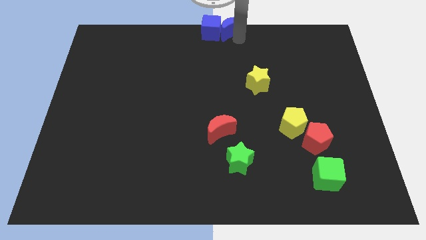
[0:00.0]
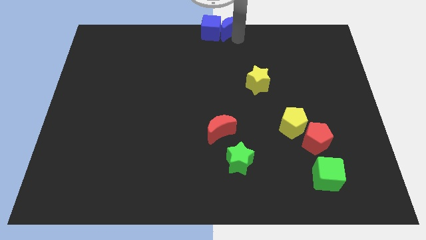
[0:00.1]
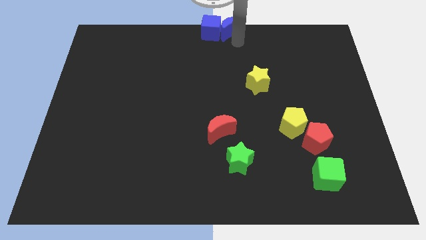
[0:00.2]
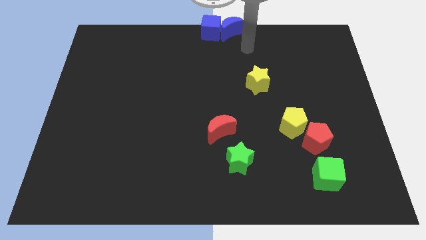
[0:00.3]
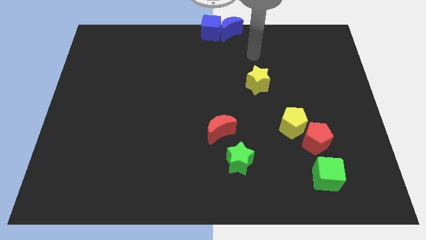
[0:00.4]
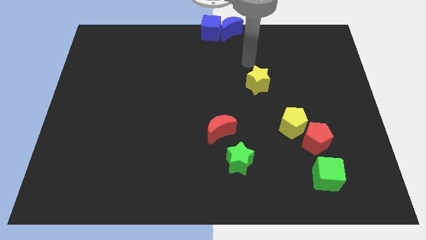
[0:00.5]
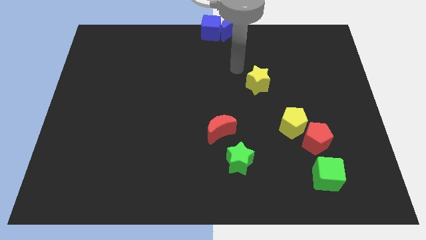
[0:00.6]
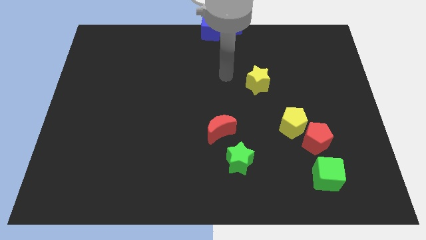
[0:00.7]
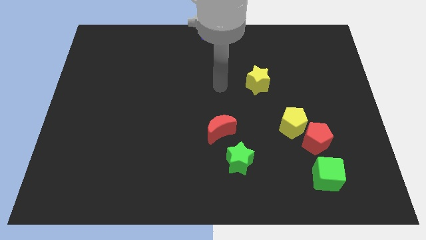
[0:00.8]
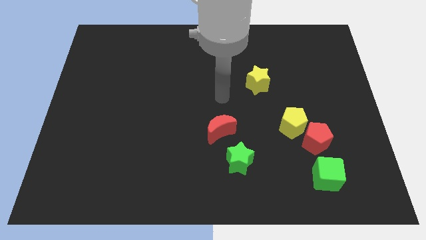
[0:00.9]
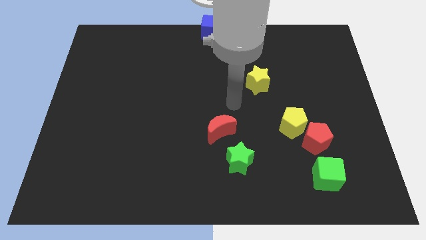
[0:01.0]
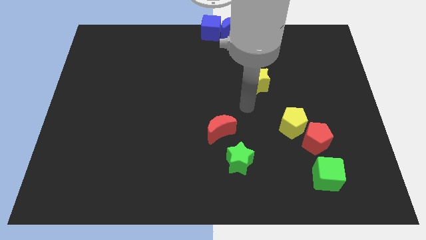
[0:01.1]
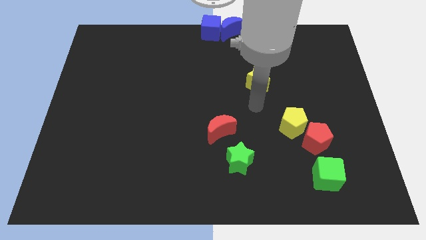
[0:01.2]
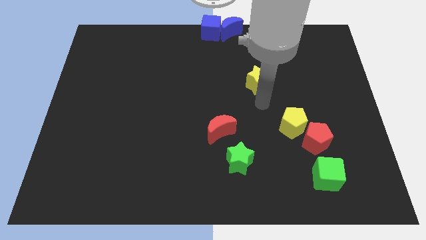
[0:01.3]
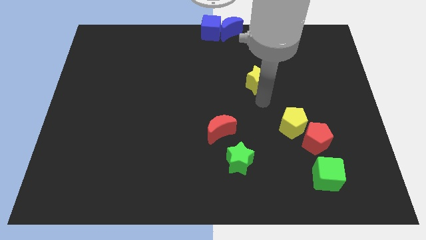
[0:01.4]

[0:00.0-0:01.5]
move your arm to the bottom of the yellow star

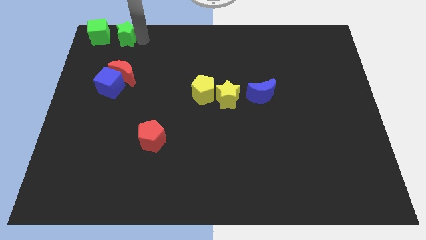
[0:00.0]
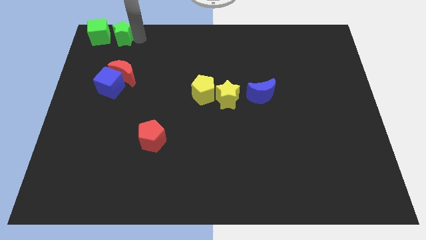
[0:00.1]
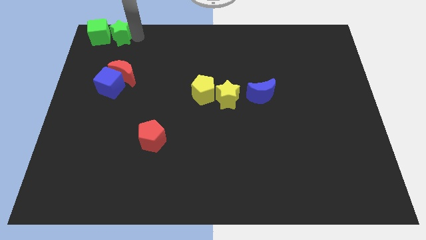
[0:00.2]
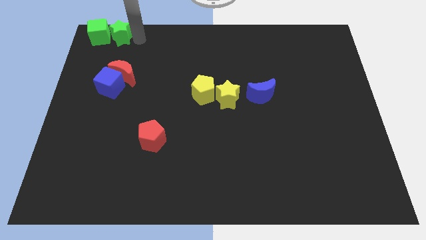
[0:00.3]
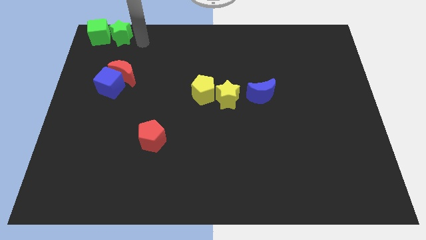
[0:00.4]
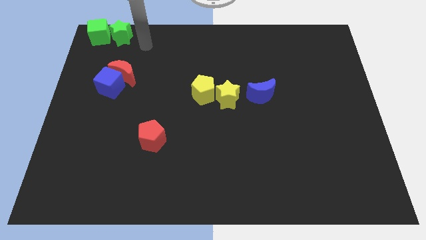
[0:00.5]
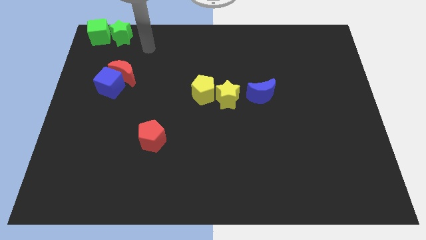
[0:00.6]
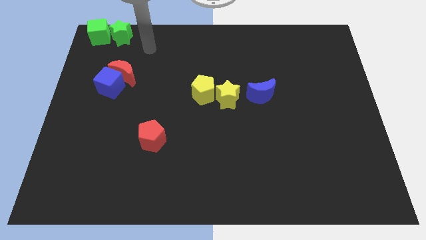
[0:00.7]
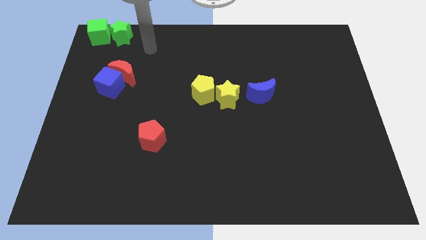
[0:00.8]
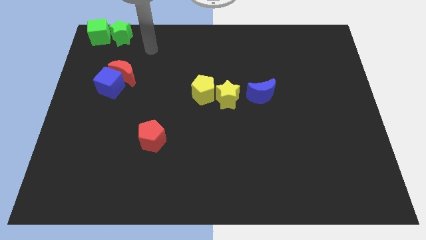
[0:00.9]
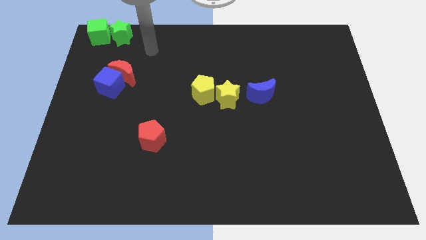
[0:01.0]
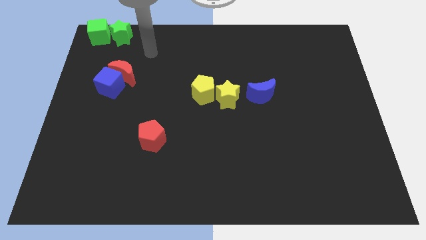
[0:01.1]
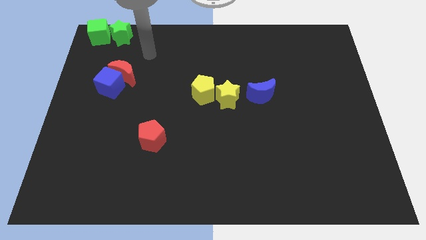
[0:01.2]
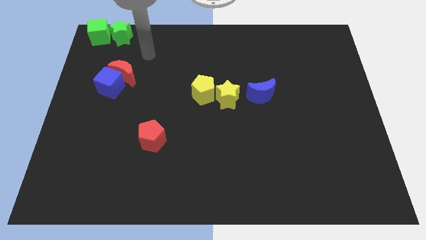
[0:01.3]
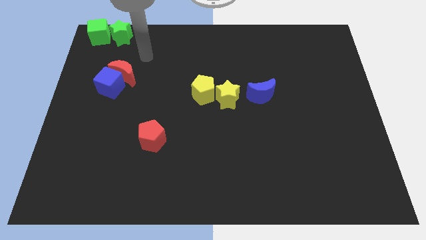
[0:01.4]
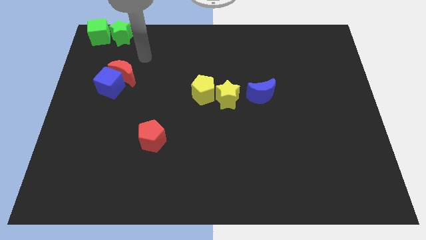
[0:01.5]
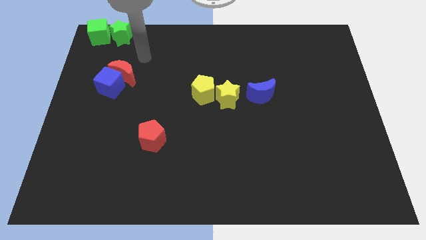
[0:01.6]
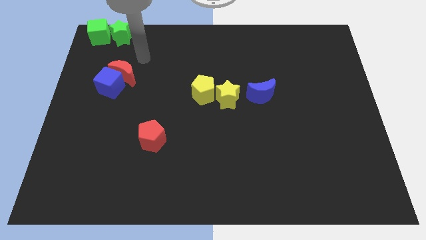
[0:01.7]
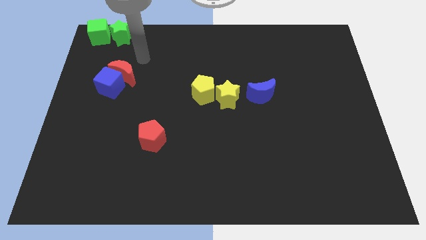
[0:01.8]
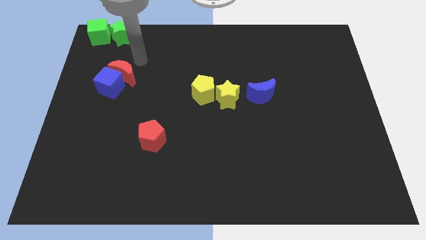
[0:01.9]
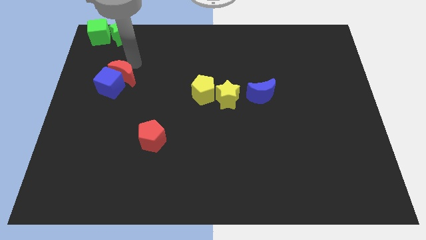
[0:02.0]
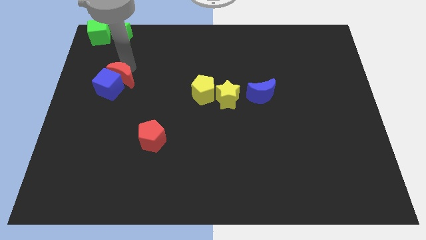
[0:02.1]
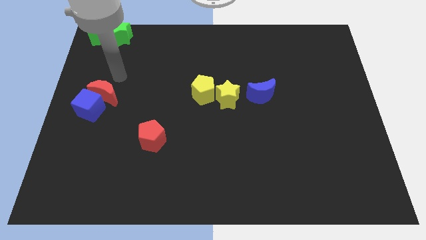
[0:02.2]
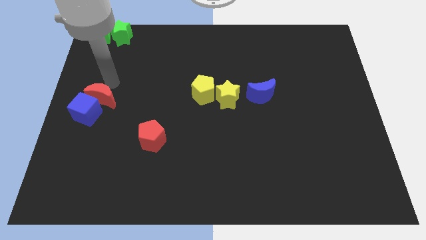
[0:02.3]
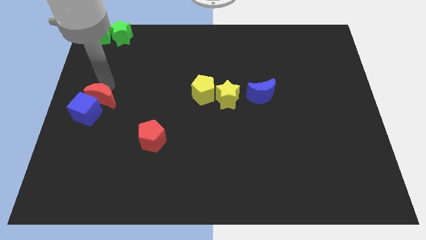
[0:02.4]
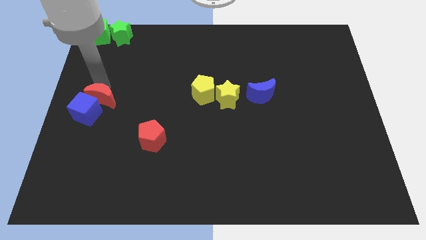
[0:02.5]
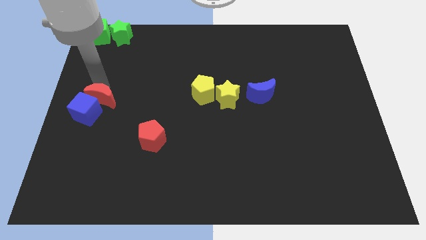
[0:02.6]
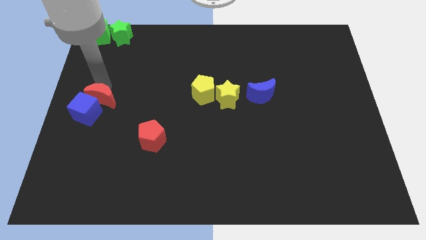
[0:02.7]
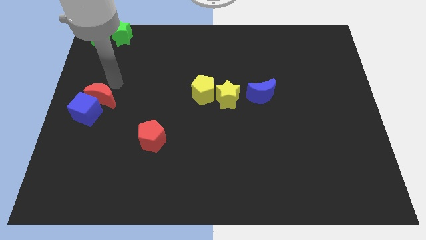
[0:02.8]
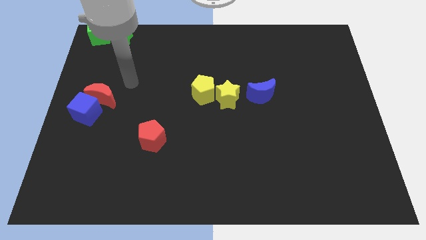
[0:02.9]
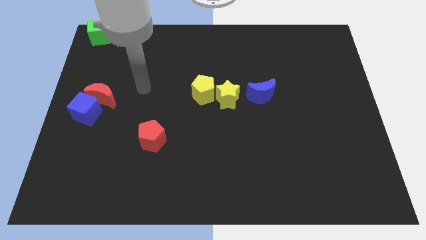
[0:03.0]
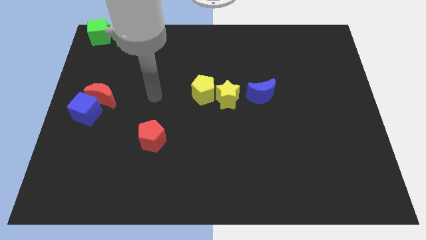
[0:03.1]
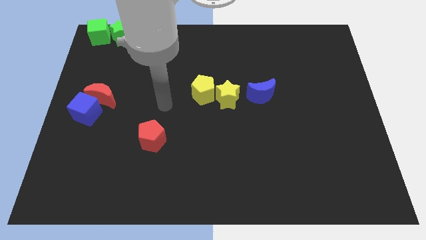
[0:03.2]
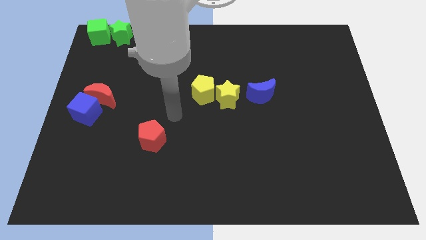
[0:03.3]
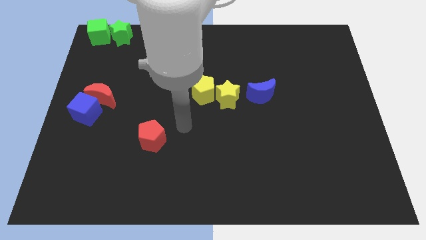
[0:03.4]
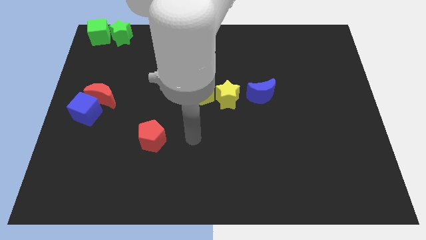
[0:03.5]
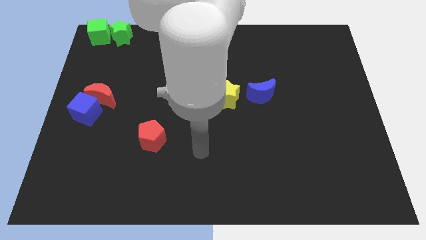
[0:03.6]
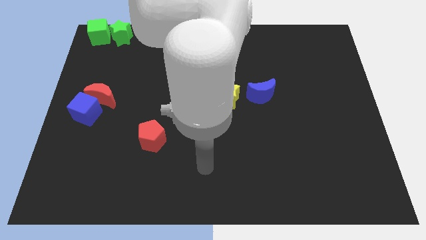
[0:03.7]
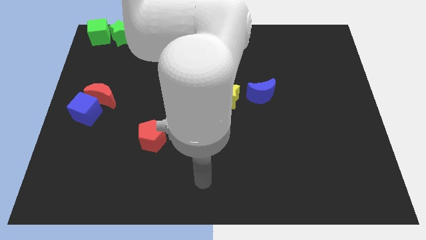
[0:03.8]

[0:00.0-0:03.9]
slightly push down the blue cube with the red moon

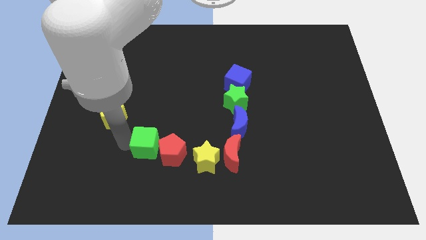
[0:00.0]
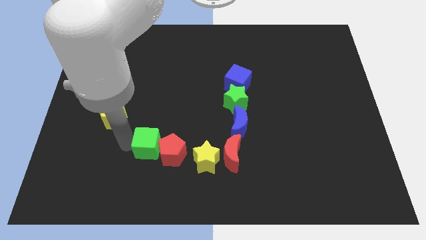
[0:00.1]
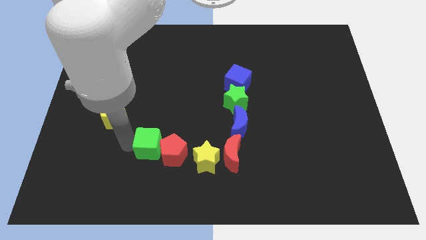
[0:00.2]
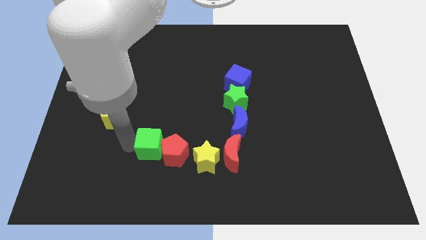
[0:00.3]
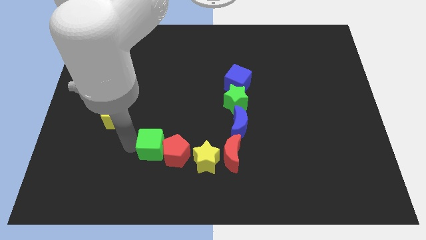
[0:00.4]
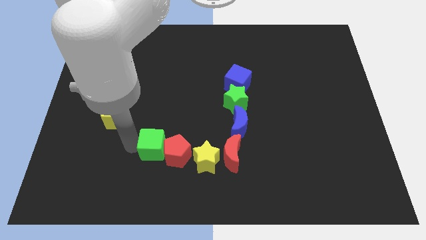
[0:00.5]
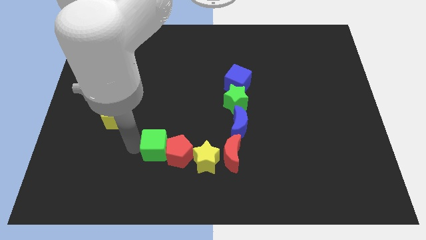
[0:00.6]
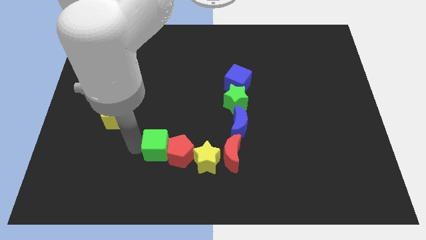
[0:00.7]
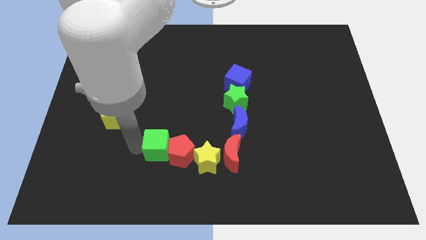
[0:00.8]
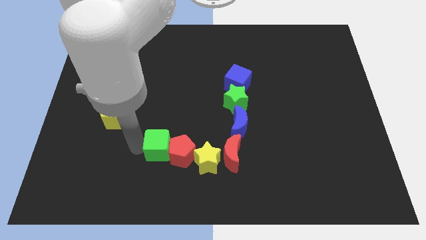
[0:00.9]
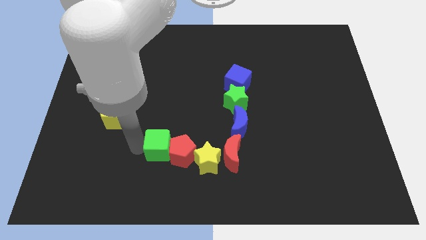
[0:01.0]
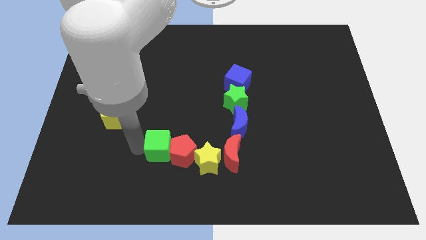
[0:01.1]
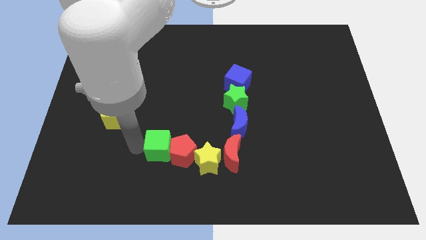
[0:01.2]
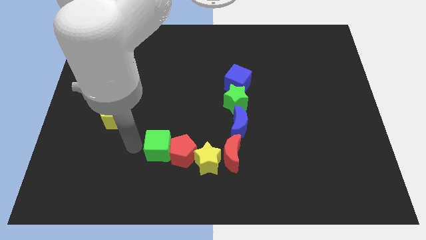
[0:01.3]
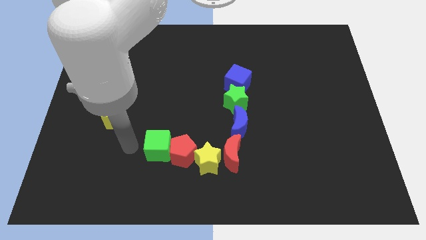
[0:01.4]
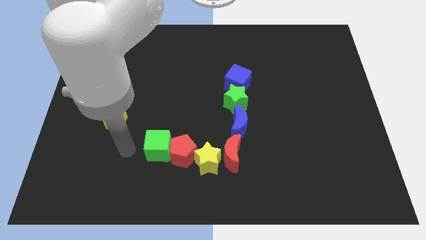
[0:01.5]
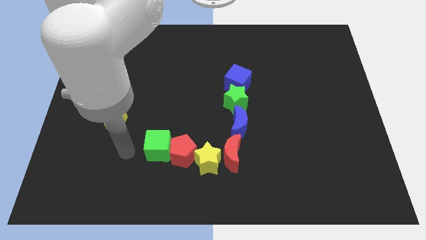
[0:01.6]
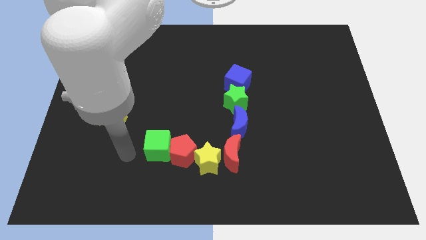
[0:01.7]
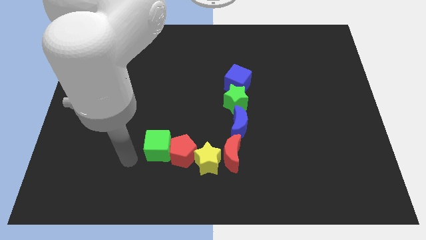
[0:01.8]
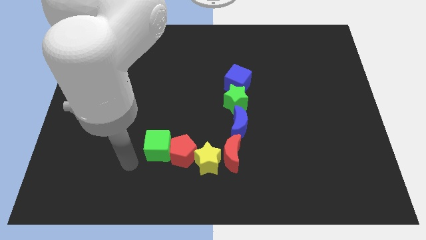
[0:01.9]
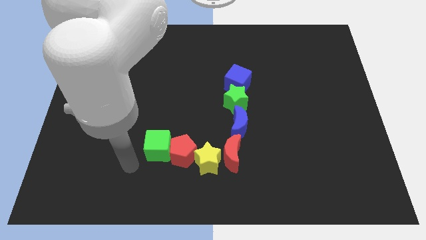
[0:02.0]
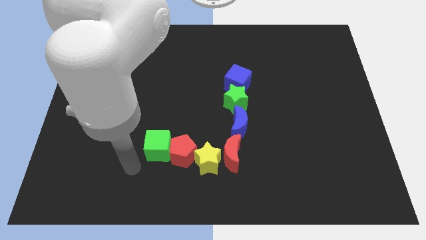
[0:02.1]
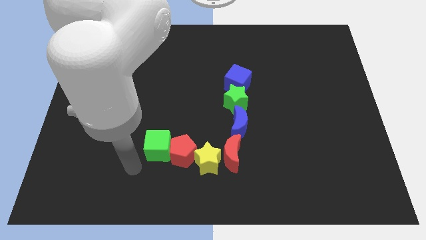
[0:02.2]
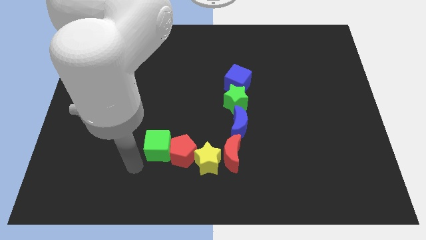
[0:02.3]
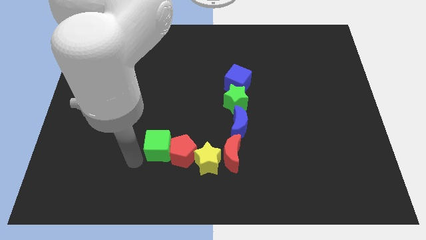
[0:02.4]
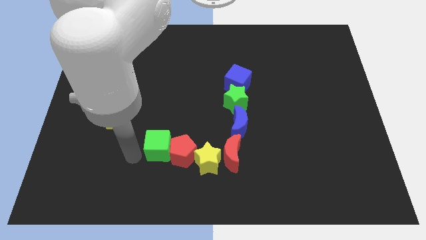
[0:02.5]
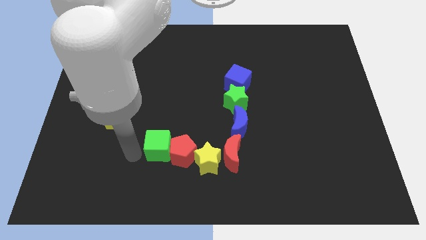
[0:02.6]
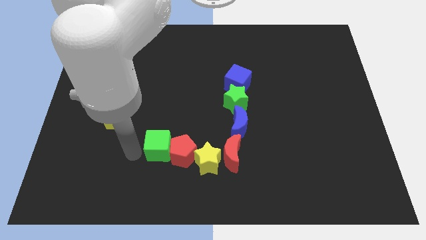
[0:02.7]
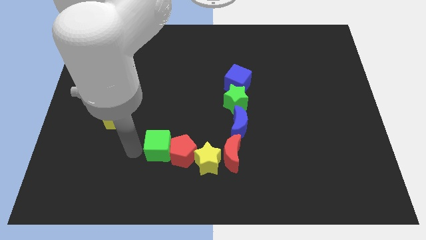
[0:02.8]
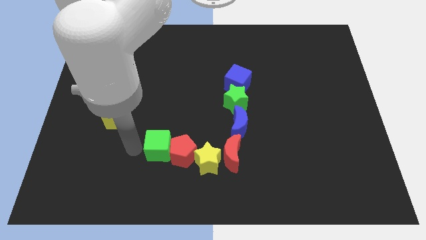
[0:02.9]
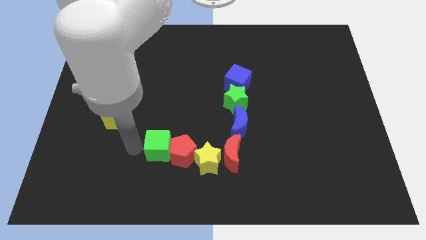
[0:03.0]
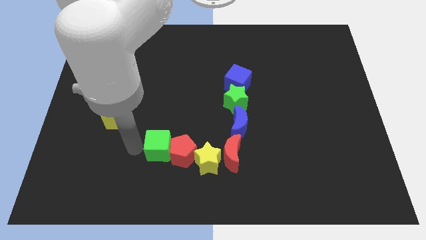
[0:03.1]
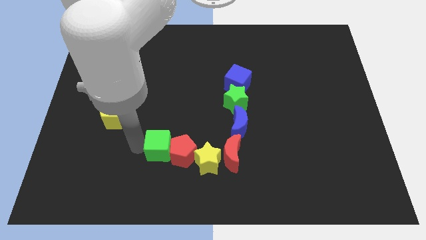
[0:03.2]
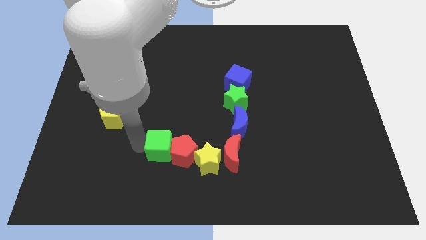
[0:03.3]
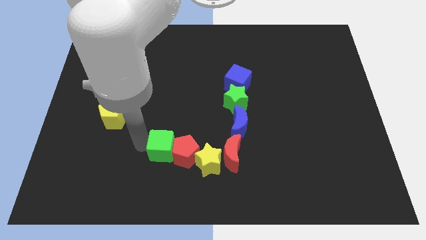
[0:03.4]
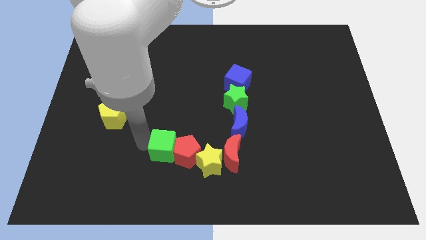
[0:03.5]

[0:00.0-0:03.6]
push green cube towards red pentagon
